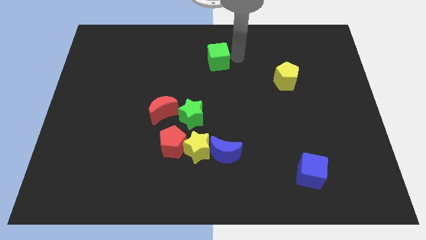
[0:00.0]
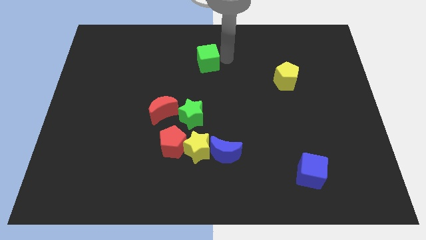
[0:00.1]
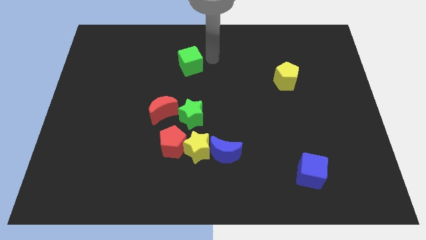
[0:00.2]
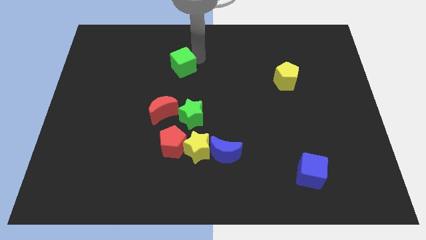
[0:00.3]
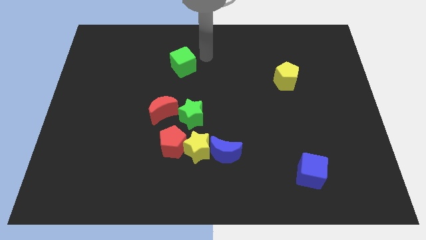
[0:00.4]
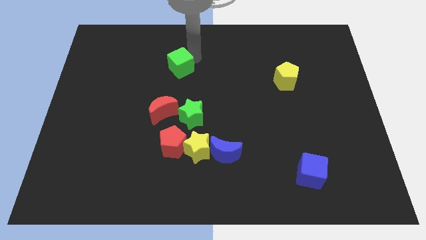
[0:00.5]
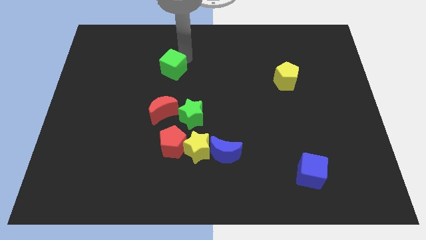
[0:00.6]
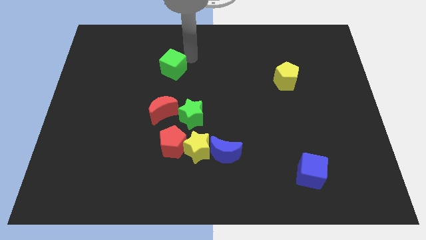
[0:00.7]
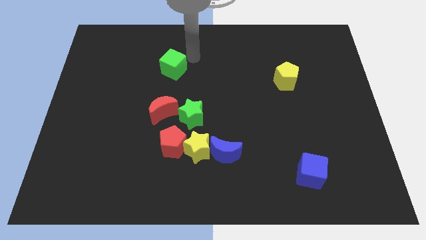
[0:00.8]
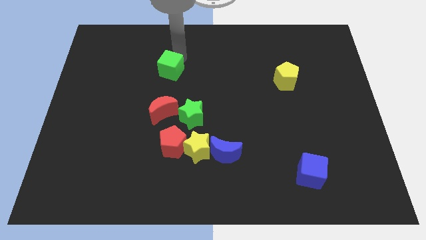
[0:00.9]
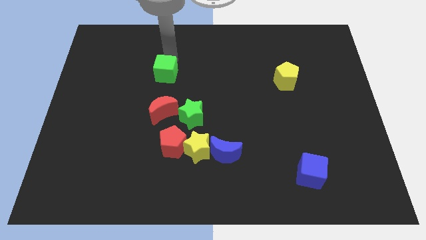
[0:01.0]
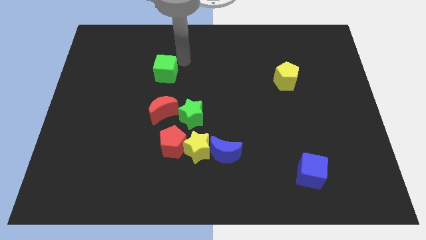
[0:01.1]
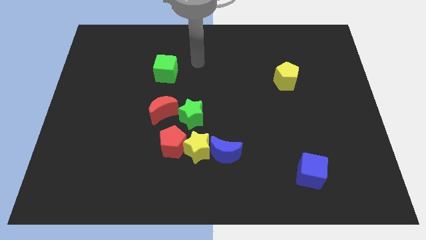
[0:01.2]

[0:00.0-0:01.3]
put the green cube vertically above the red crescent

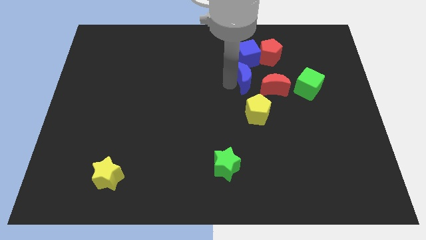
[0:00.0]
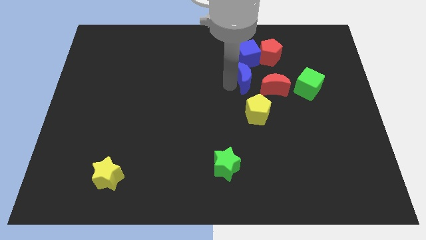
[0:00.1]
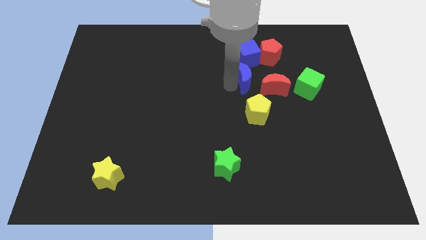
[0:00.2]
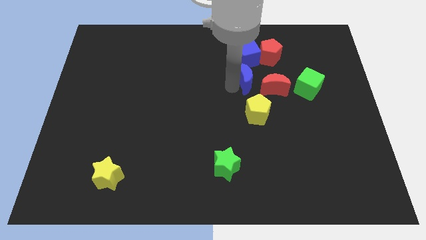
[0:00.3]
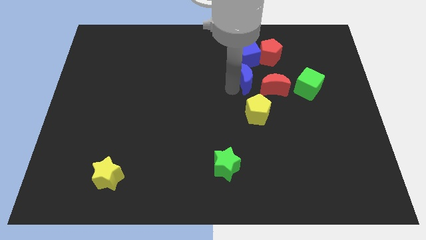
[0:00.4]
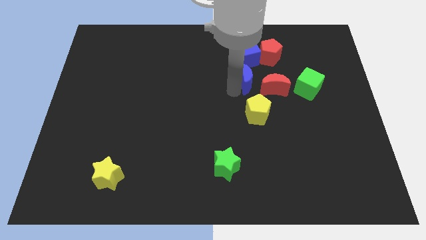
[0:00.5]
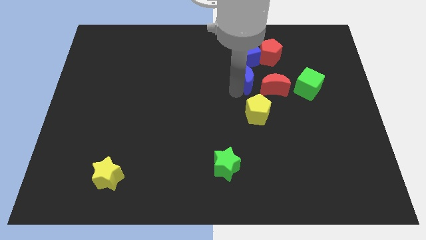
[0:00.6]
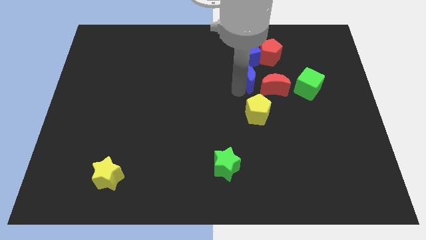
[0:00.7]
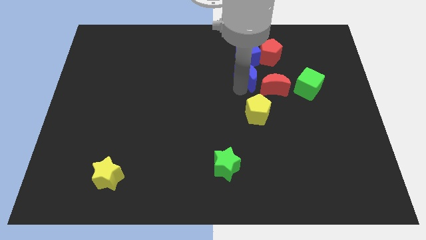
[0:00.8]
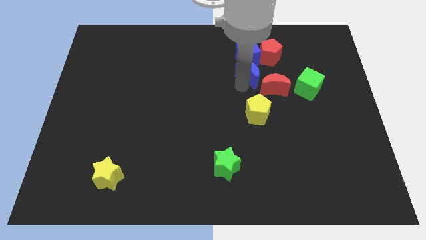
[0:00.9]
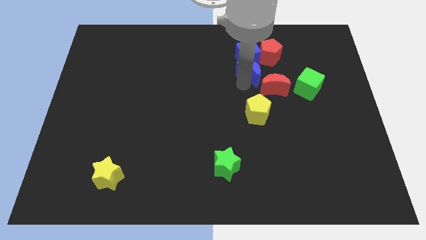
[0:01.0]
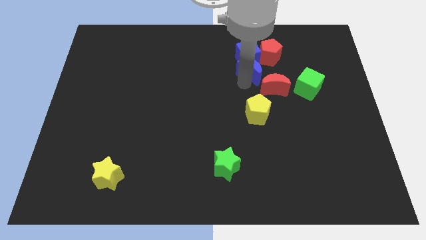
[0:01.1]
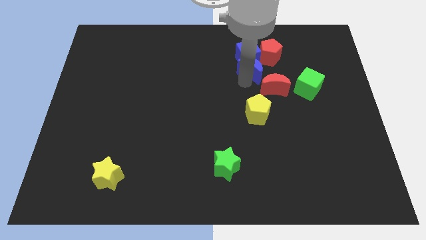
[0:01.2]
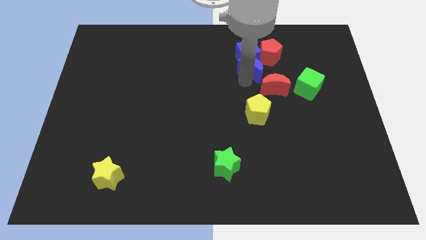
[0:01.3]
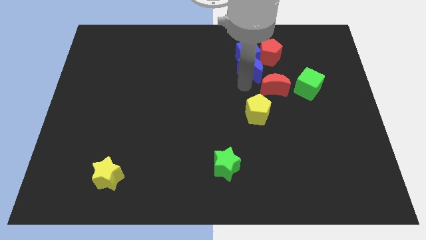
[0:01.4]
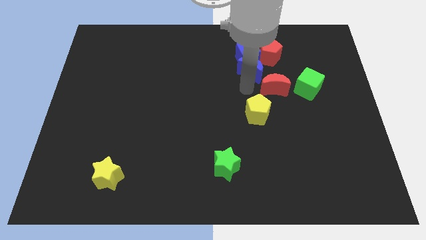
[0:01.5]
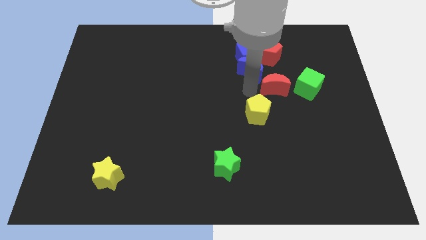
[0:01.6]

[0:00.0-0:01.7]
place the blue crescent below the blue penatagon

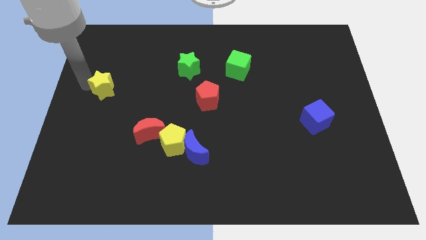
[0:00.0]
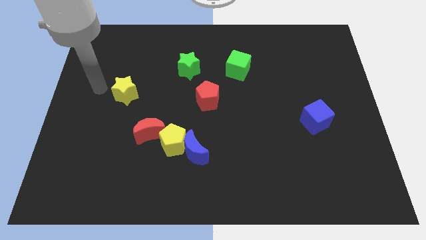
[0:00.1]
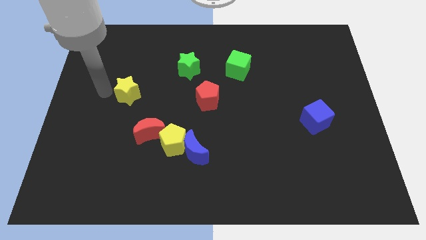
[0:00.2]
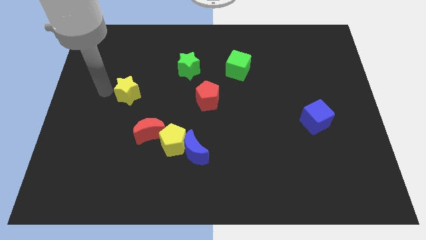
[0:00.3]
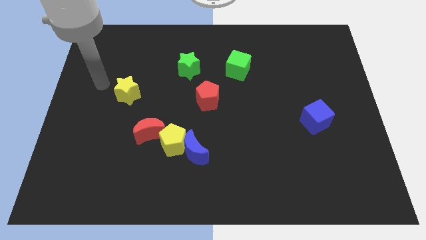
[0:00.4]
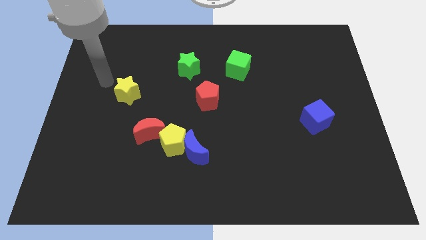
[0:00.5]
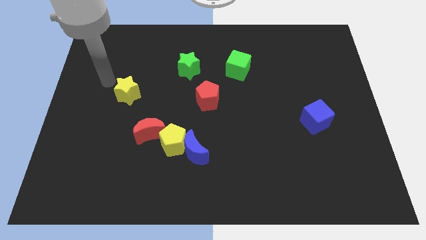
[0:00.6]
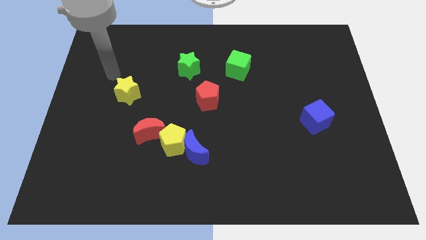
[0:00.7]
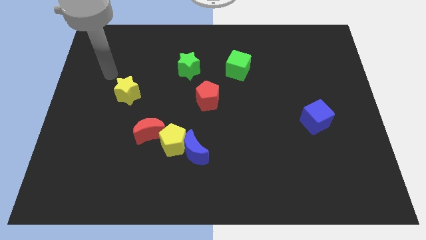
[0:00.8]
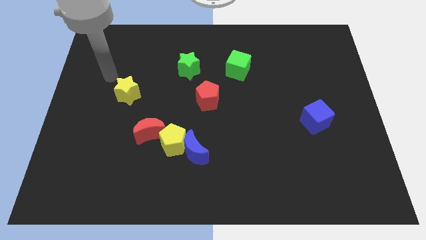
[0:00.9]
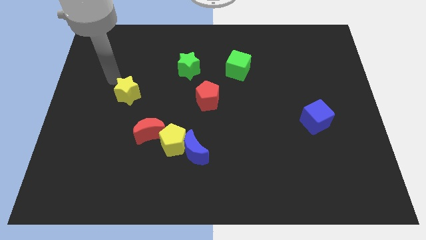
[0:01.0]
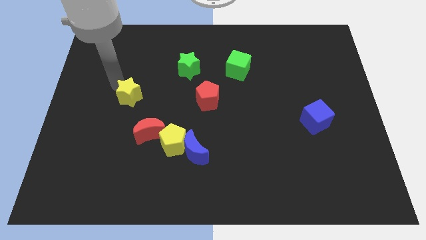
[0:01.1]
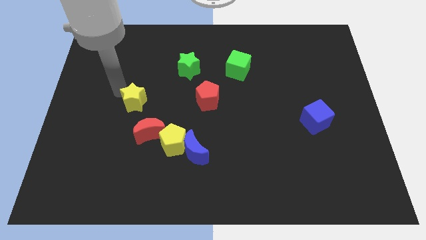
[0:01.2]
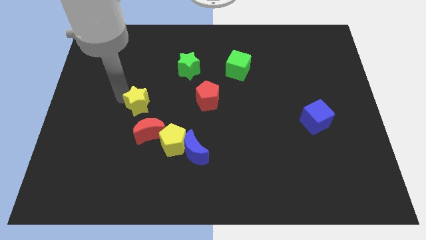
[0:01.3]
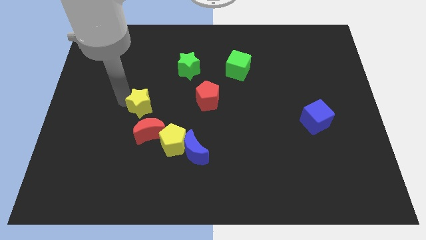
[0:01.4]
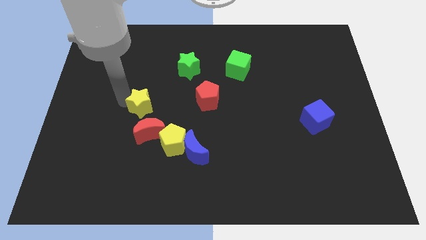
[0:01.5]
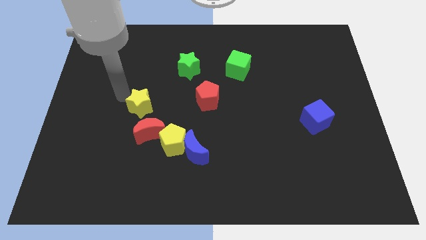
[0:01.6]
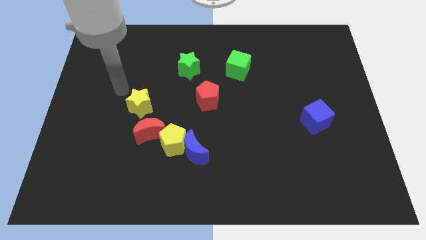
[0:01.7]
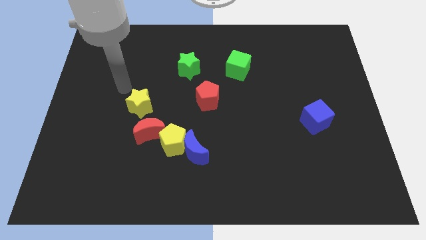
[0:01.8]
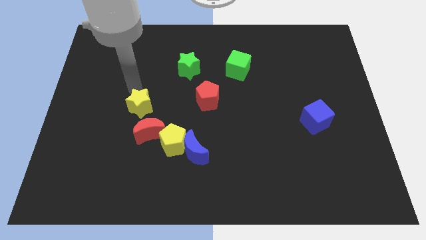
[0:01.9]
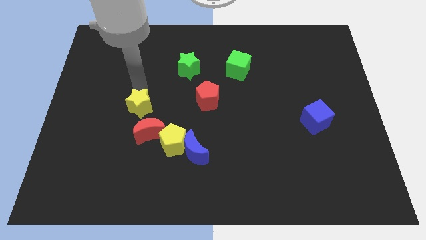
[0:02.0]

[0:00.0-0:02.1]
slide the yellow star to the top of the red moon

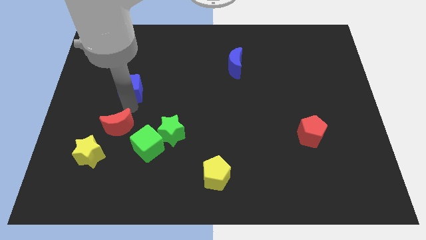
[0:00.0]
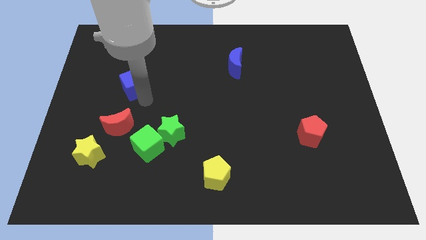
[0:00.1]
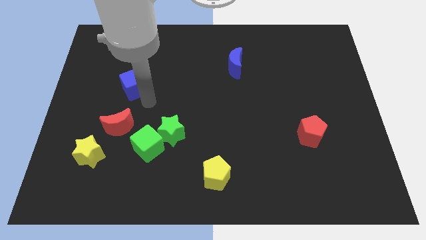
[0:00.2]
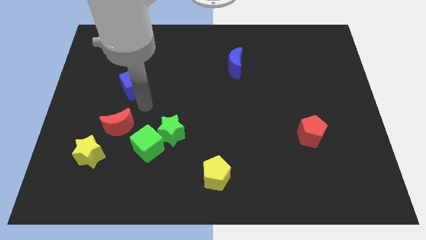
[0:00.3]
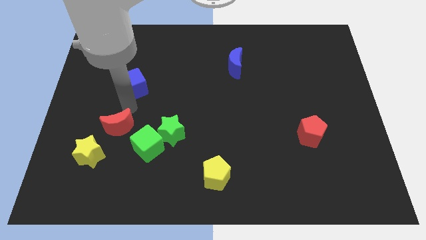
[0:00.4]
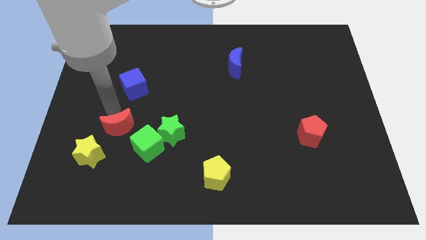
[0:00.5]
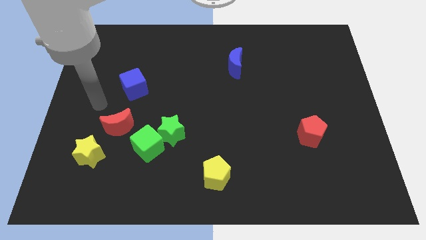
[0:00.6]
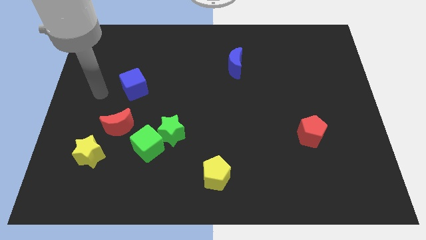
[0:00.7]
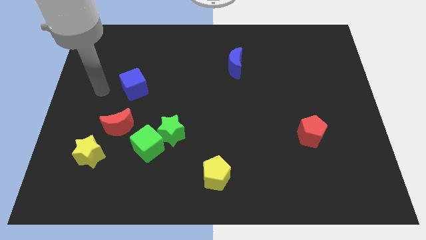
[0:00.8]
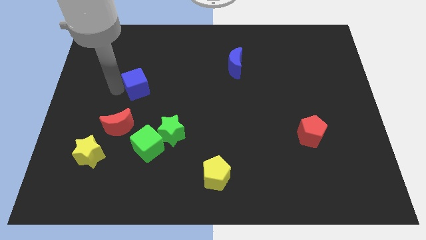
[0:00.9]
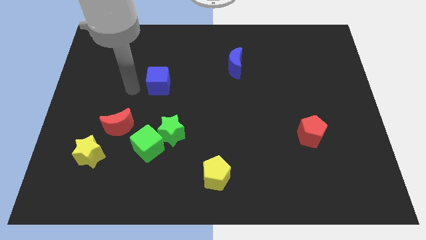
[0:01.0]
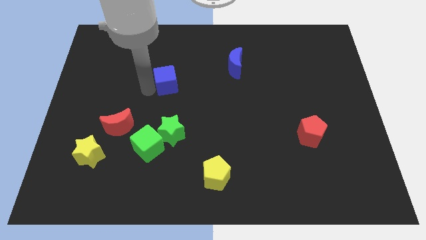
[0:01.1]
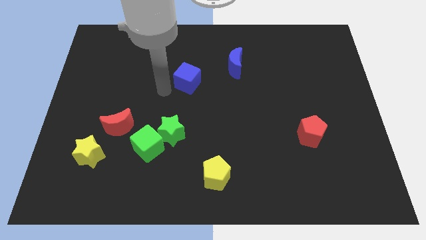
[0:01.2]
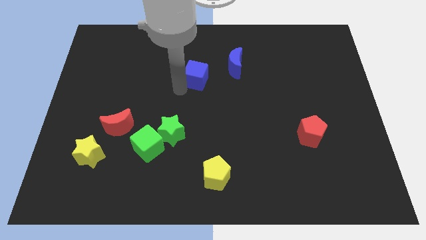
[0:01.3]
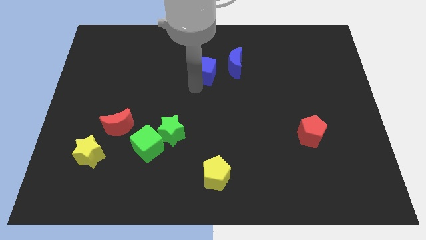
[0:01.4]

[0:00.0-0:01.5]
move the blue cube towards blue crescent

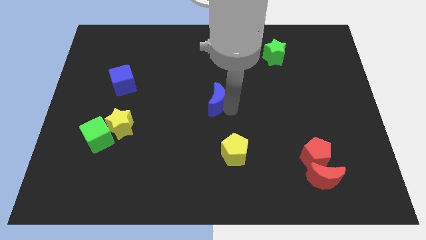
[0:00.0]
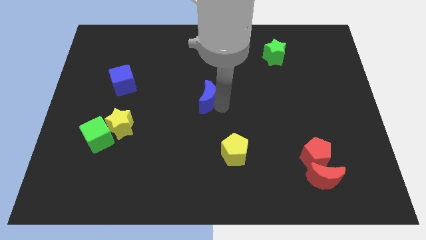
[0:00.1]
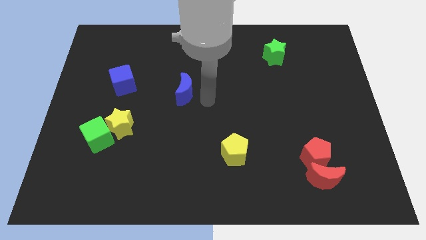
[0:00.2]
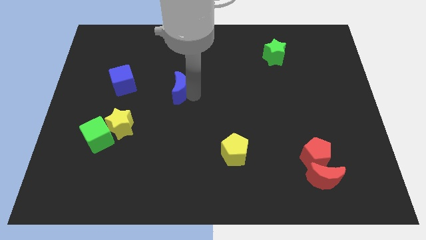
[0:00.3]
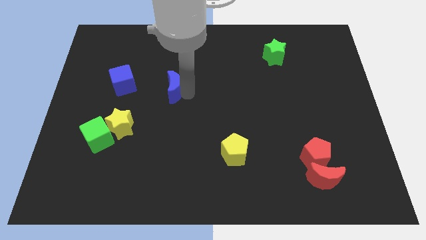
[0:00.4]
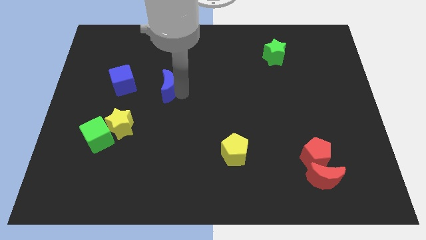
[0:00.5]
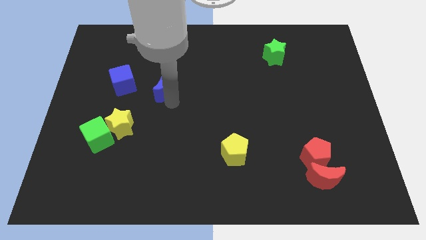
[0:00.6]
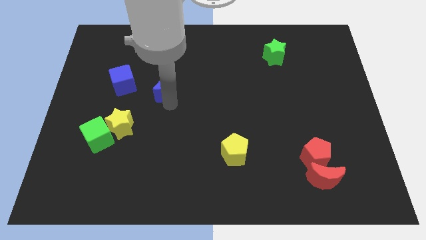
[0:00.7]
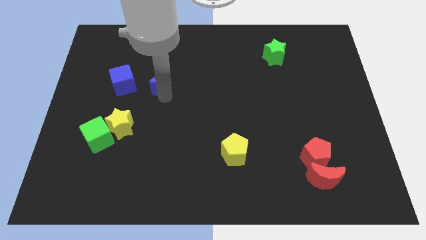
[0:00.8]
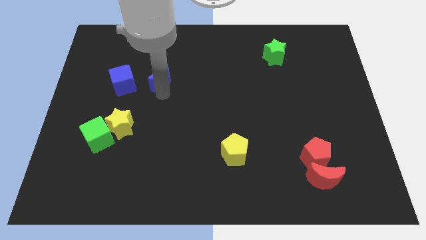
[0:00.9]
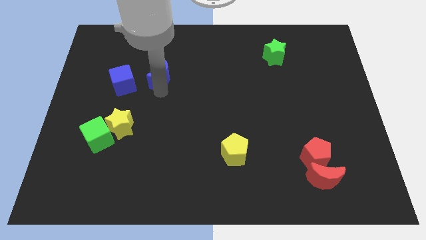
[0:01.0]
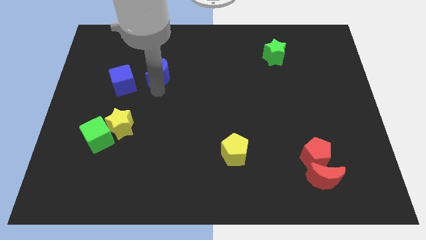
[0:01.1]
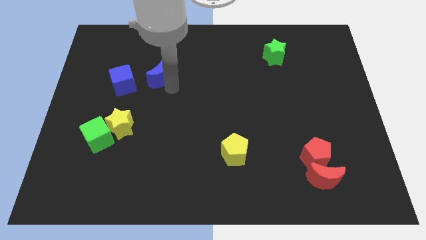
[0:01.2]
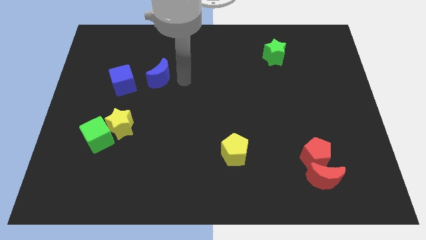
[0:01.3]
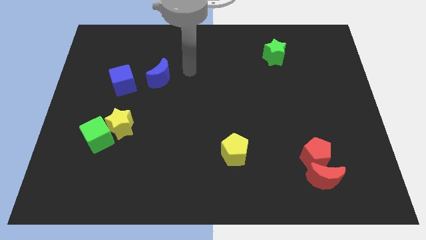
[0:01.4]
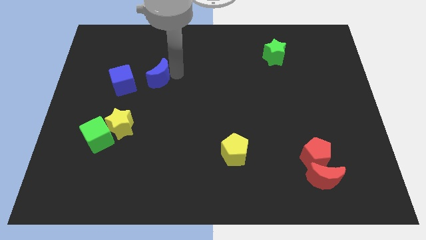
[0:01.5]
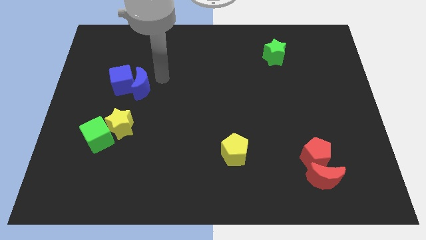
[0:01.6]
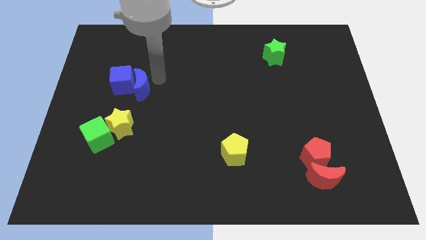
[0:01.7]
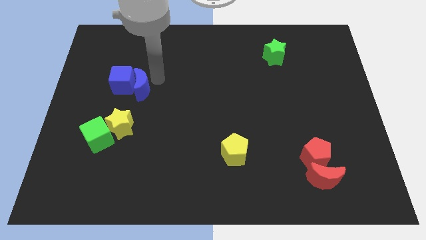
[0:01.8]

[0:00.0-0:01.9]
push the blue crescent to the right of the blue cube

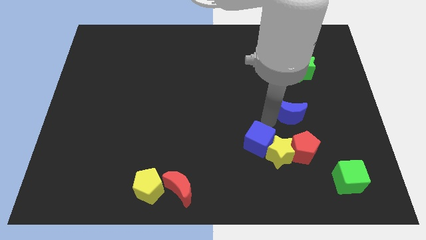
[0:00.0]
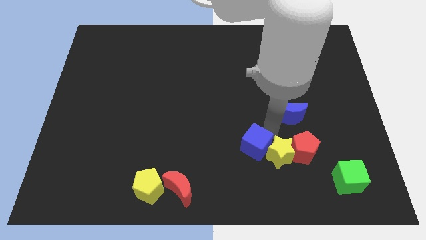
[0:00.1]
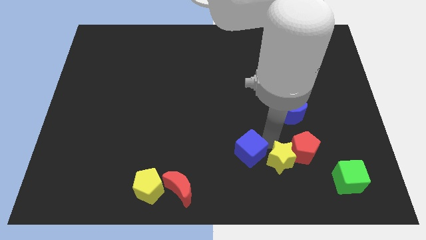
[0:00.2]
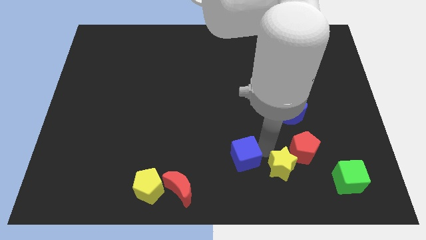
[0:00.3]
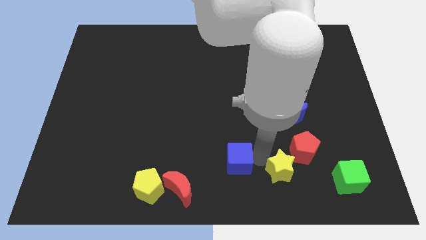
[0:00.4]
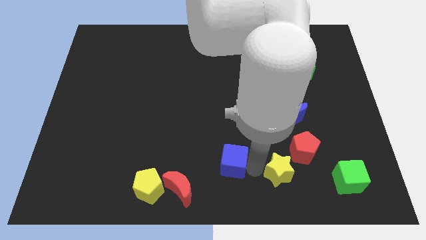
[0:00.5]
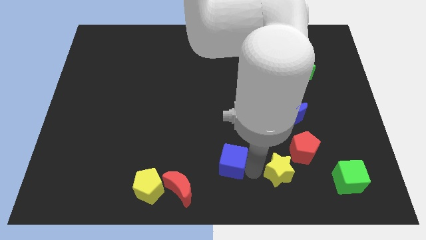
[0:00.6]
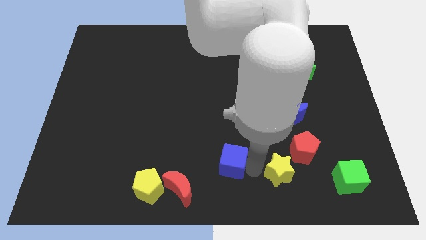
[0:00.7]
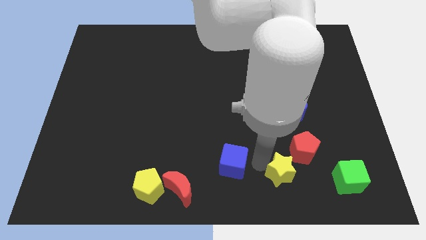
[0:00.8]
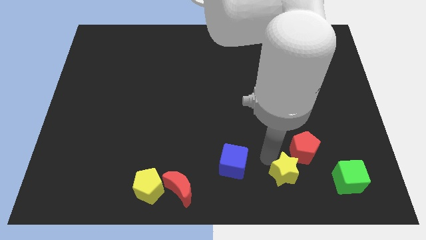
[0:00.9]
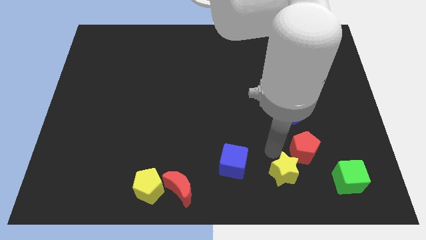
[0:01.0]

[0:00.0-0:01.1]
separate the blue crescent from yellow star
